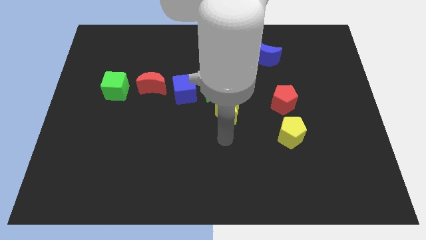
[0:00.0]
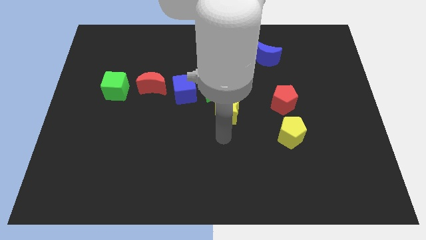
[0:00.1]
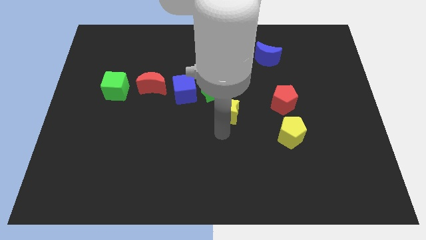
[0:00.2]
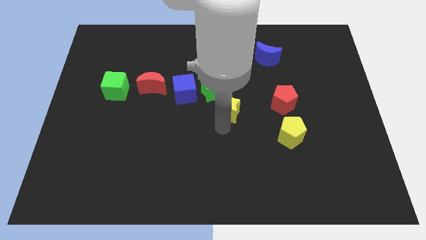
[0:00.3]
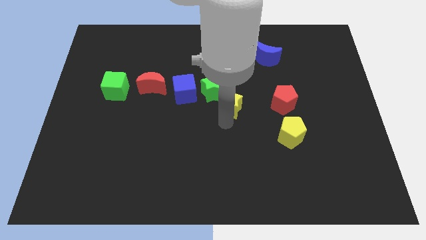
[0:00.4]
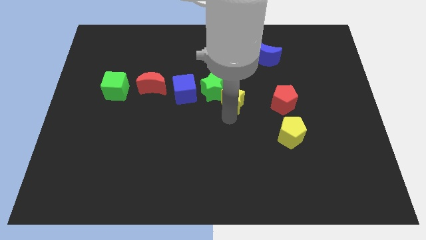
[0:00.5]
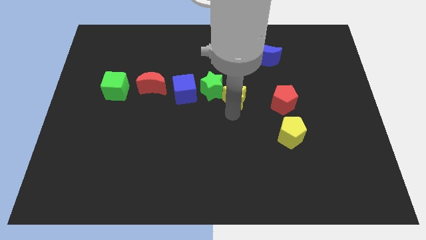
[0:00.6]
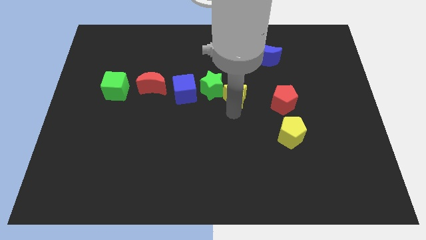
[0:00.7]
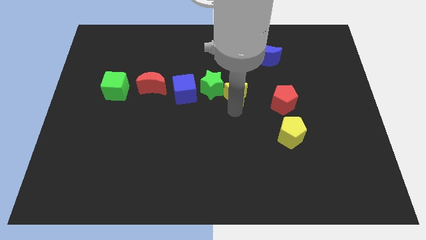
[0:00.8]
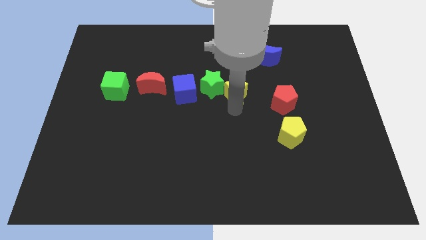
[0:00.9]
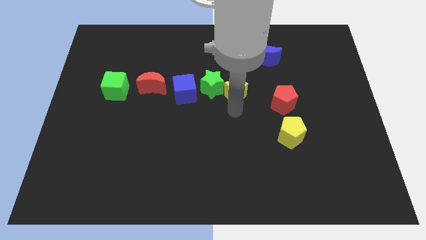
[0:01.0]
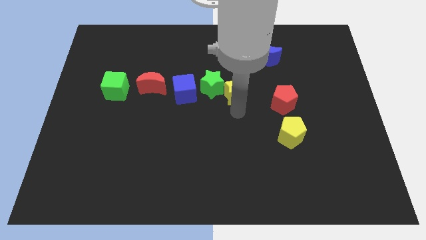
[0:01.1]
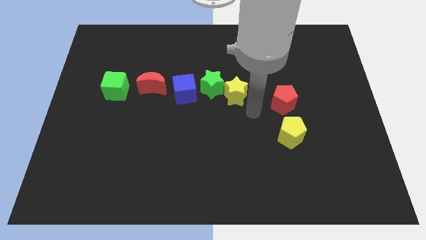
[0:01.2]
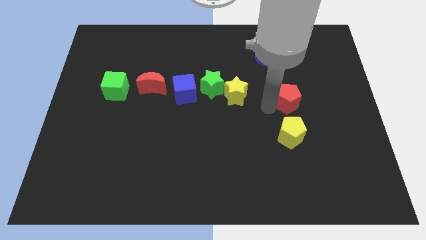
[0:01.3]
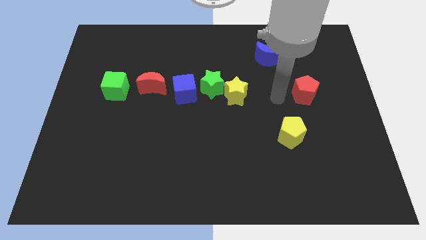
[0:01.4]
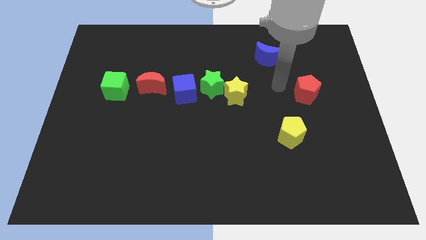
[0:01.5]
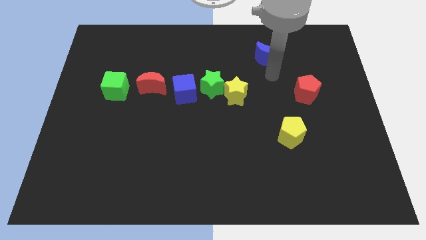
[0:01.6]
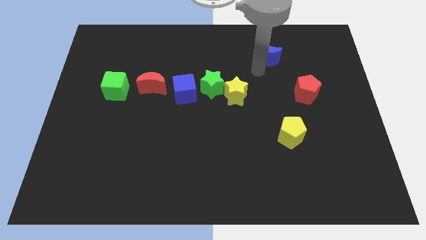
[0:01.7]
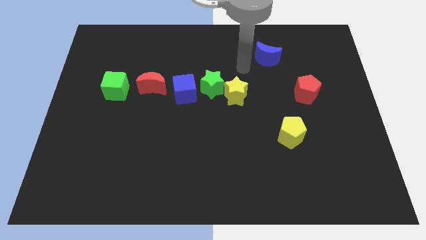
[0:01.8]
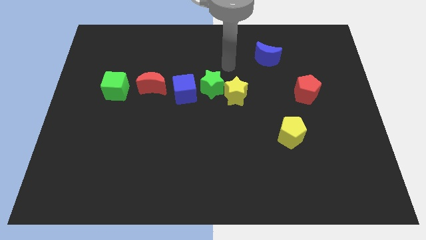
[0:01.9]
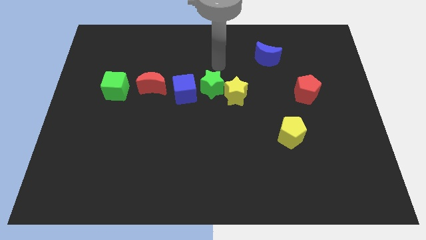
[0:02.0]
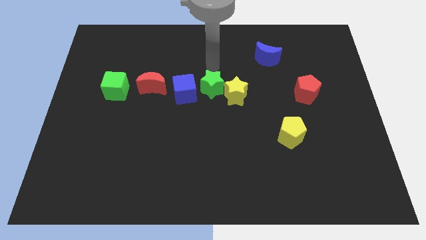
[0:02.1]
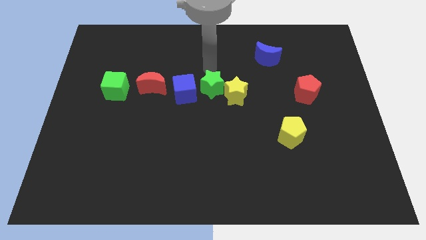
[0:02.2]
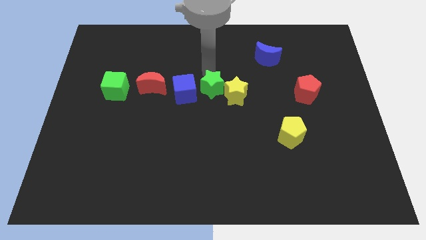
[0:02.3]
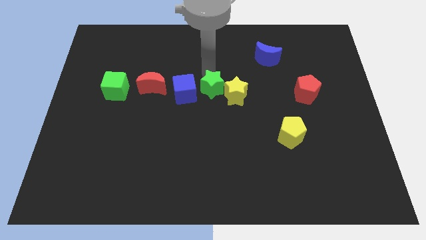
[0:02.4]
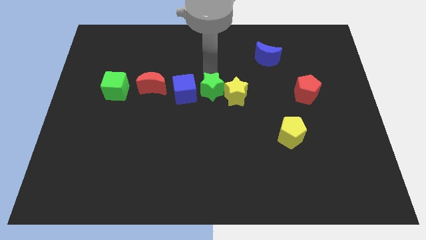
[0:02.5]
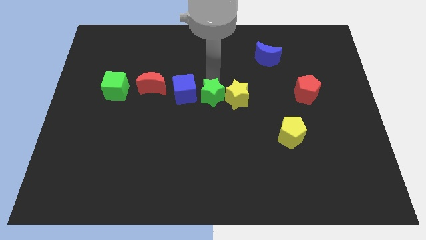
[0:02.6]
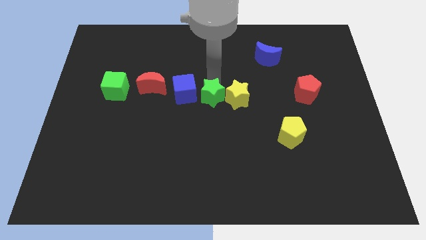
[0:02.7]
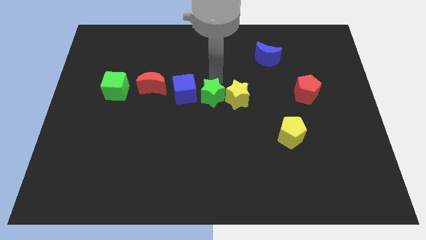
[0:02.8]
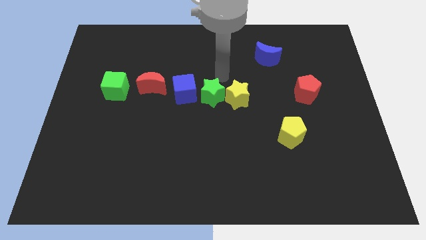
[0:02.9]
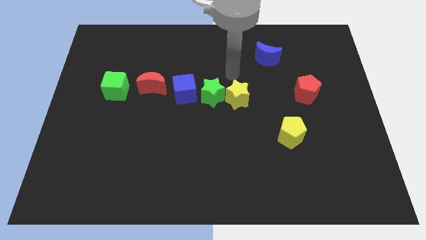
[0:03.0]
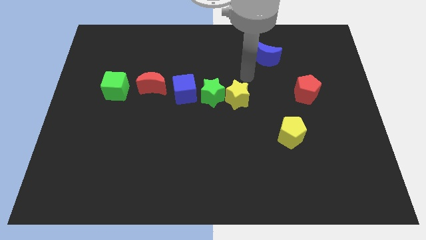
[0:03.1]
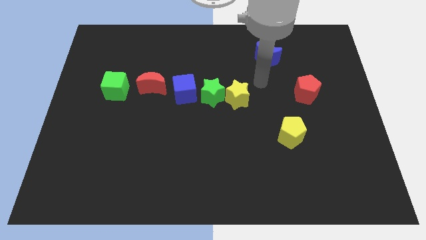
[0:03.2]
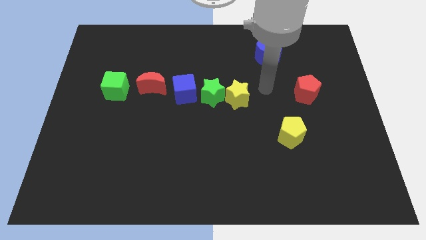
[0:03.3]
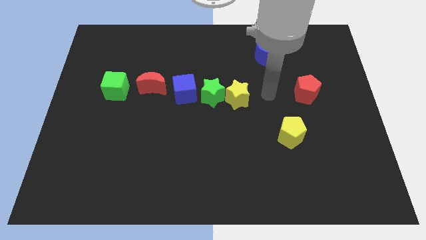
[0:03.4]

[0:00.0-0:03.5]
push the yellow star and the green star together

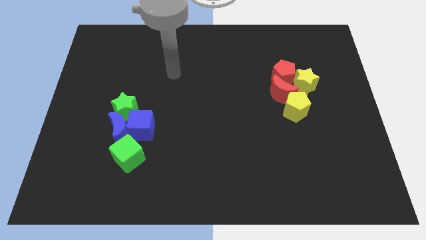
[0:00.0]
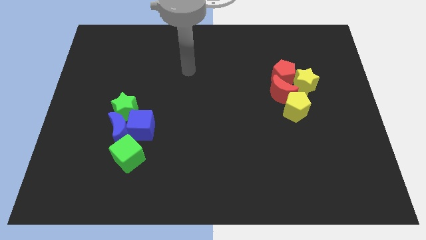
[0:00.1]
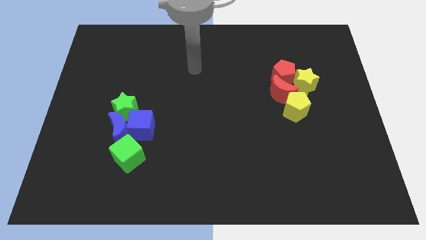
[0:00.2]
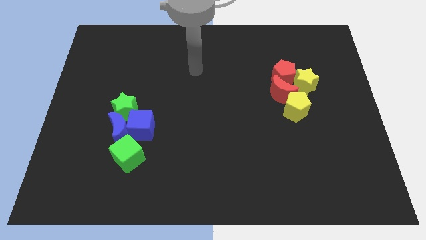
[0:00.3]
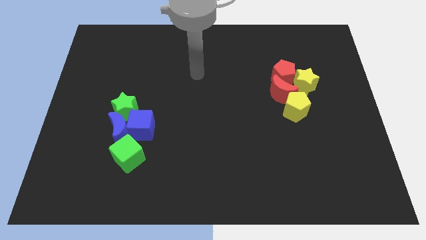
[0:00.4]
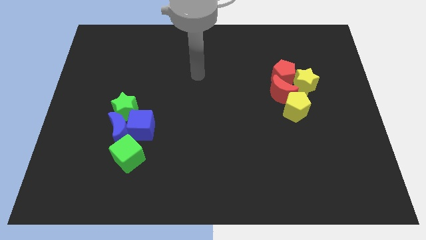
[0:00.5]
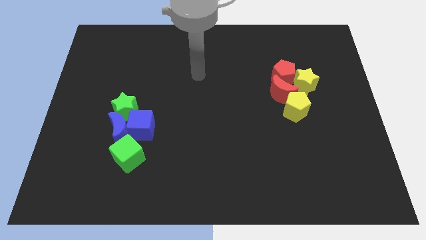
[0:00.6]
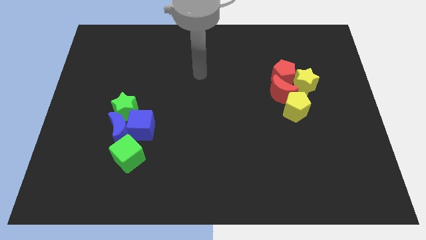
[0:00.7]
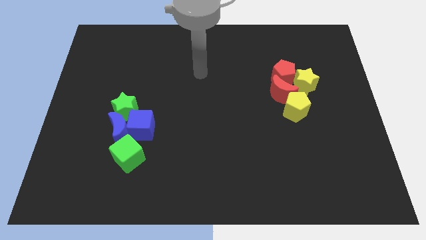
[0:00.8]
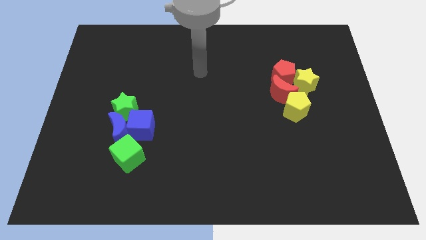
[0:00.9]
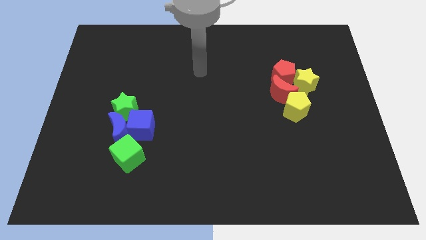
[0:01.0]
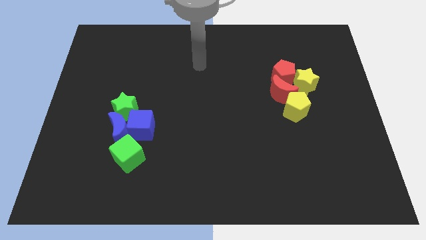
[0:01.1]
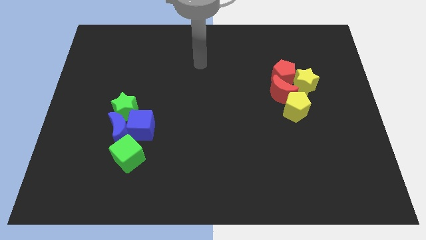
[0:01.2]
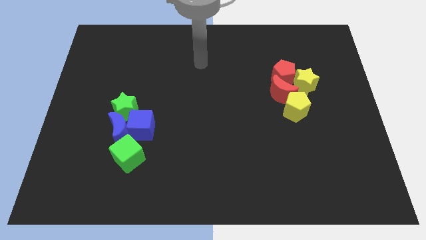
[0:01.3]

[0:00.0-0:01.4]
move your hand towards the top center

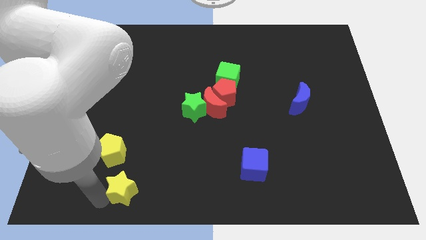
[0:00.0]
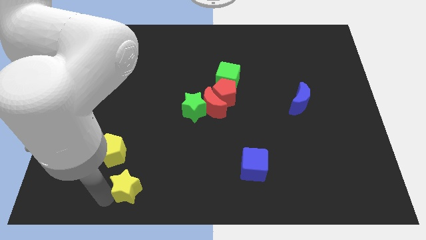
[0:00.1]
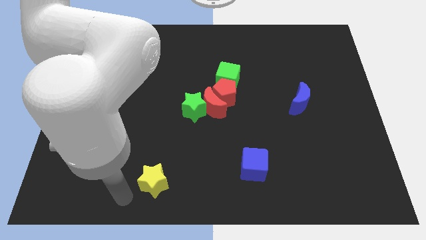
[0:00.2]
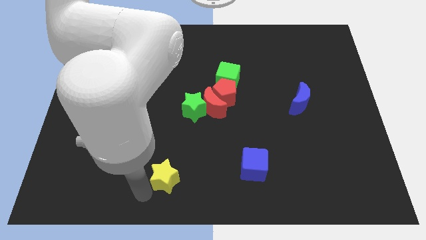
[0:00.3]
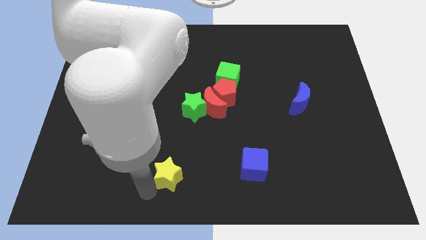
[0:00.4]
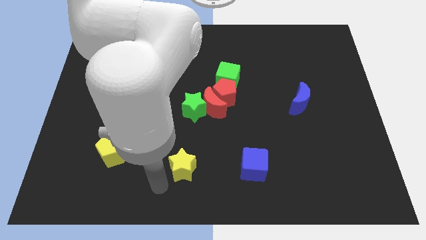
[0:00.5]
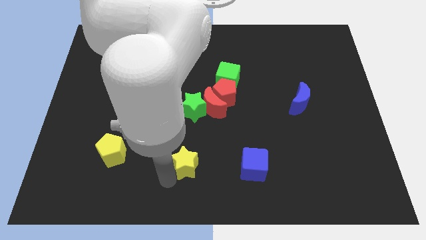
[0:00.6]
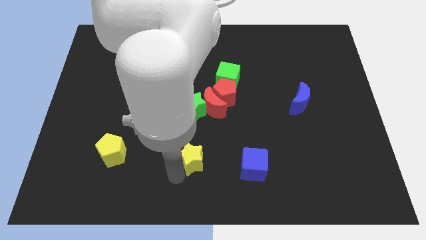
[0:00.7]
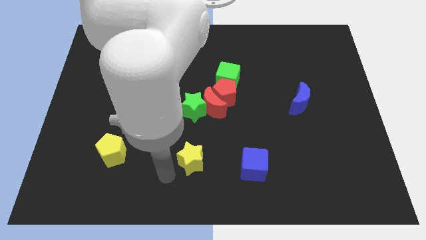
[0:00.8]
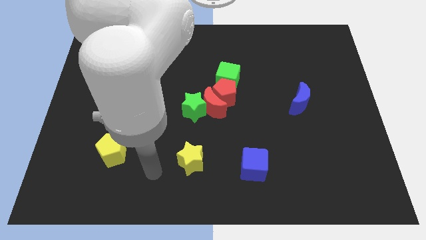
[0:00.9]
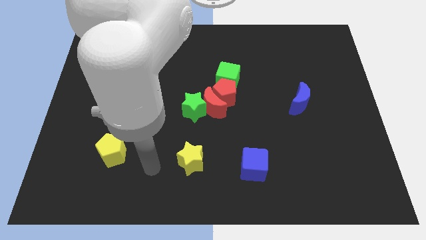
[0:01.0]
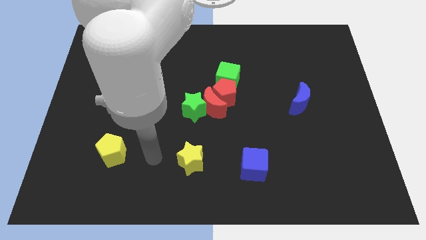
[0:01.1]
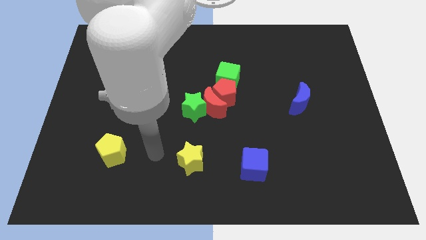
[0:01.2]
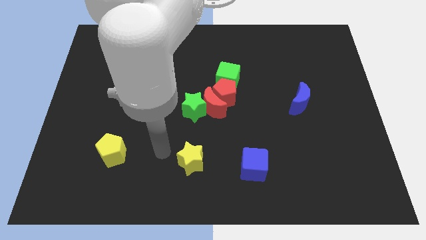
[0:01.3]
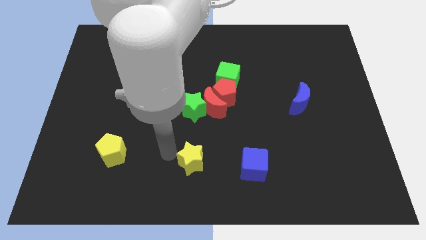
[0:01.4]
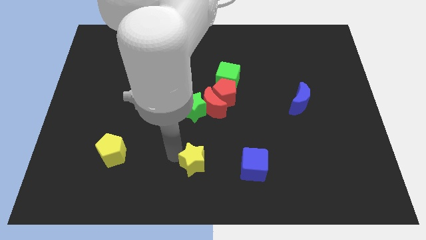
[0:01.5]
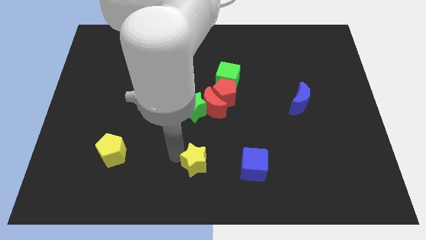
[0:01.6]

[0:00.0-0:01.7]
place yellow star below green star

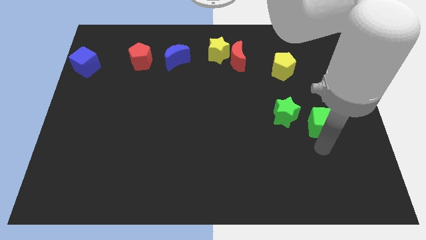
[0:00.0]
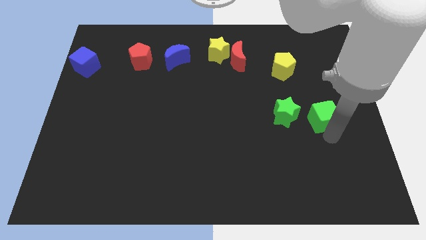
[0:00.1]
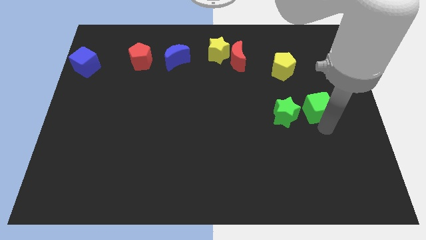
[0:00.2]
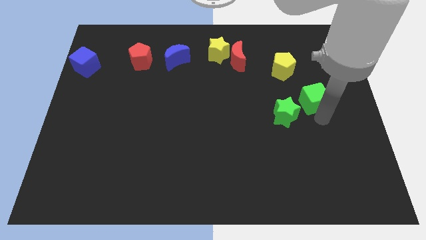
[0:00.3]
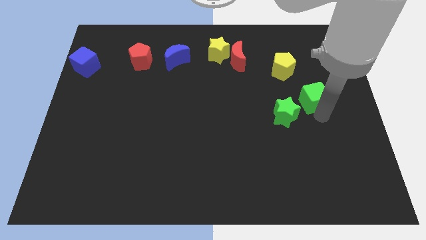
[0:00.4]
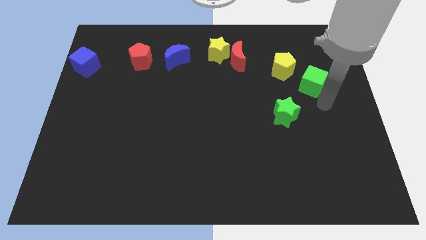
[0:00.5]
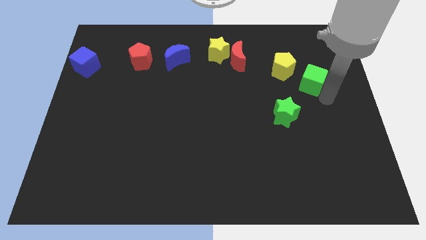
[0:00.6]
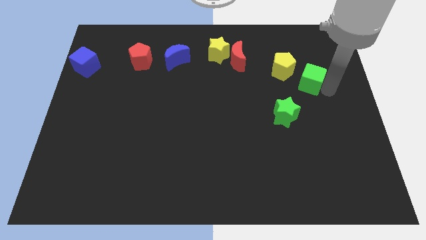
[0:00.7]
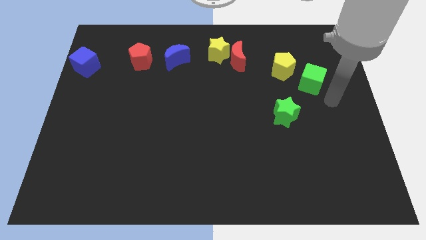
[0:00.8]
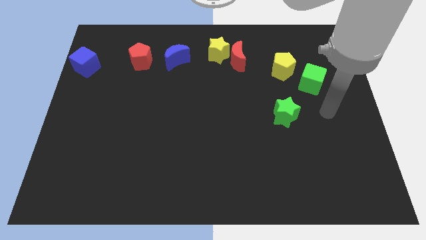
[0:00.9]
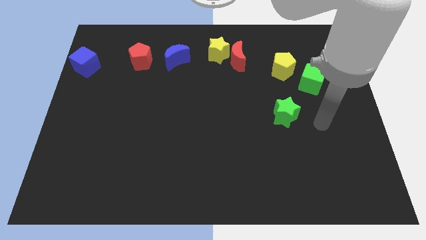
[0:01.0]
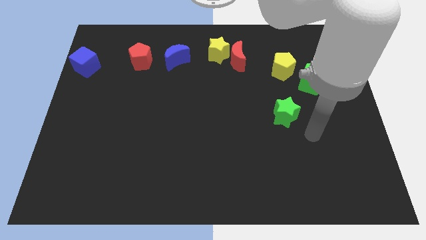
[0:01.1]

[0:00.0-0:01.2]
push the green cube bottom right to the yellow pentagon

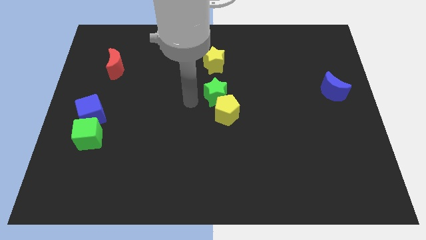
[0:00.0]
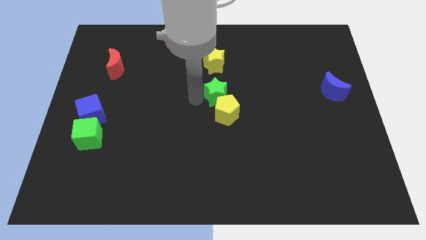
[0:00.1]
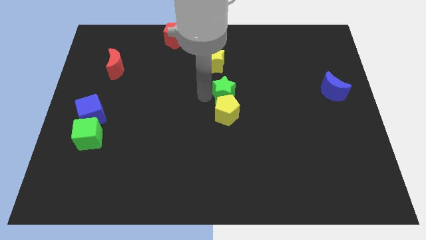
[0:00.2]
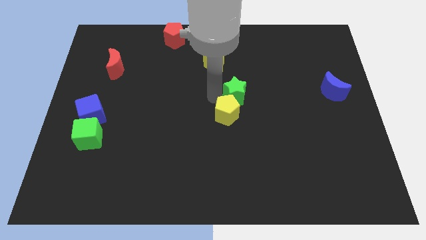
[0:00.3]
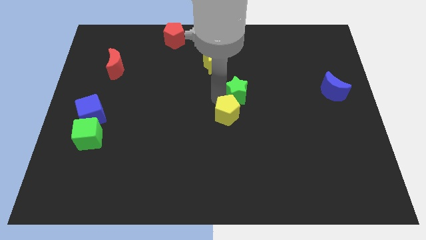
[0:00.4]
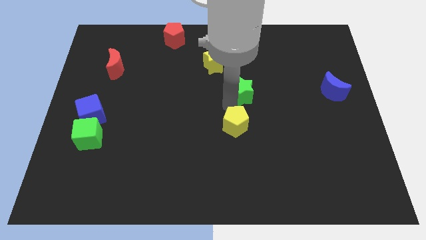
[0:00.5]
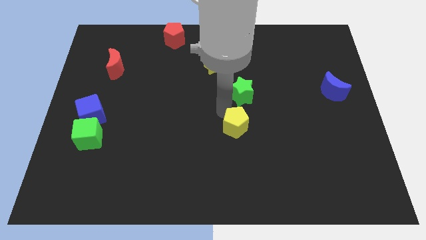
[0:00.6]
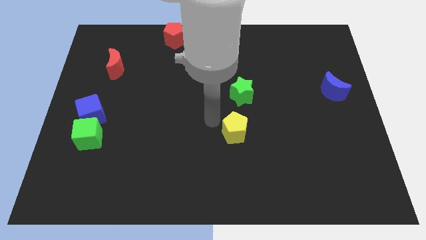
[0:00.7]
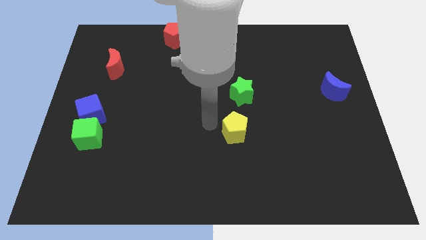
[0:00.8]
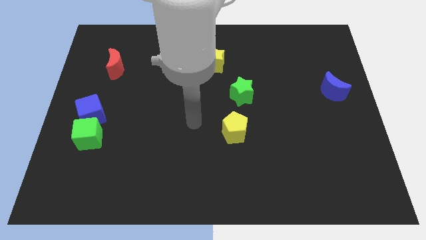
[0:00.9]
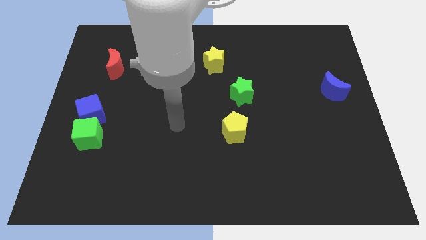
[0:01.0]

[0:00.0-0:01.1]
separate green star and yellow pentagon
